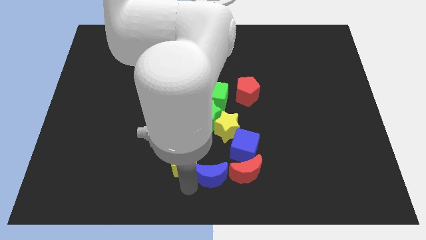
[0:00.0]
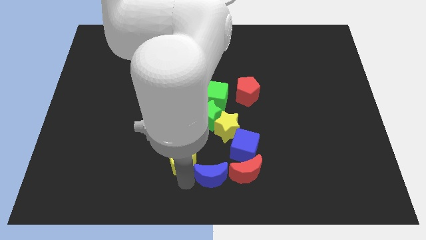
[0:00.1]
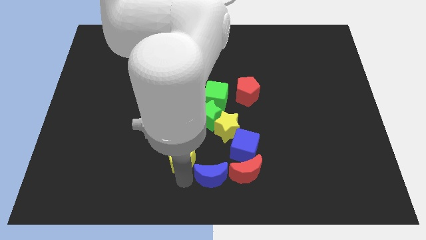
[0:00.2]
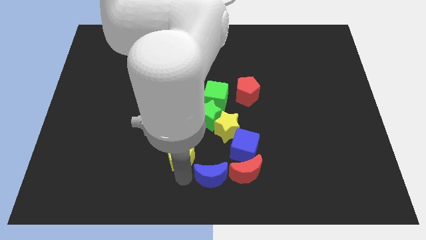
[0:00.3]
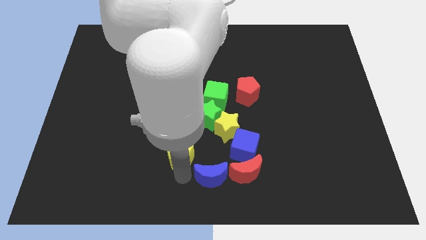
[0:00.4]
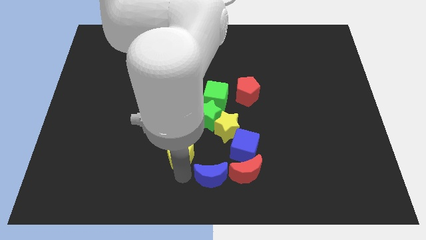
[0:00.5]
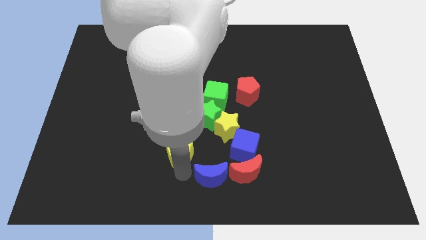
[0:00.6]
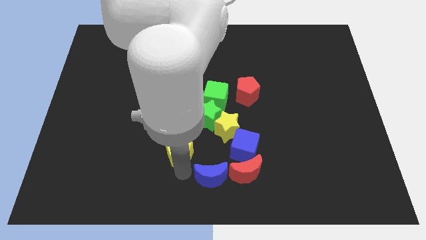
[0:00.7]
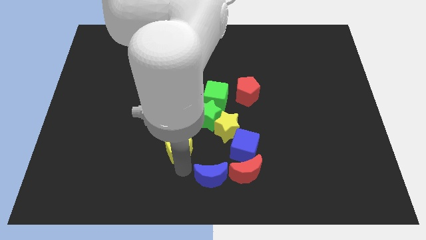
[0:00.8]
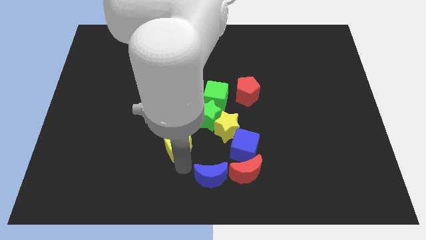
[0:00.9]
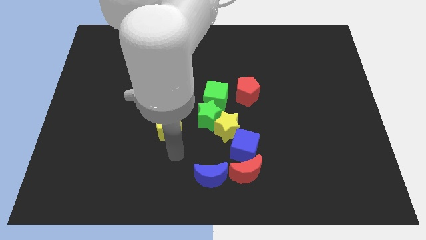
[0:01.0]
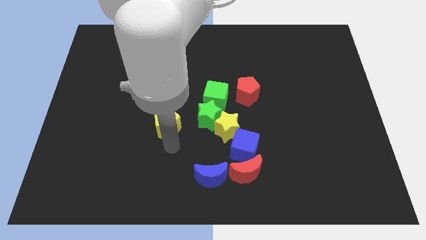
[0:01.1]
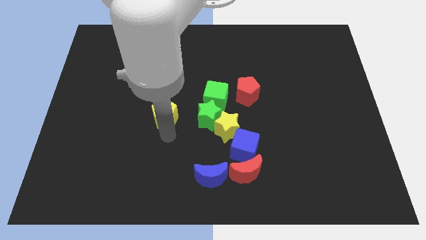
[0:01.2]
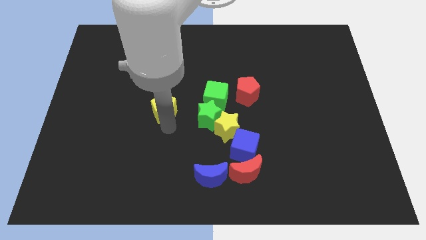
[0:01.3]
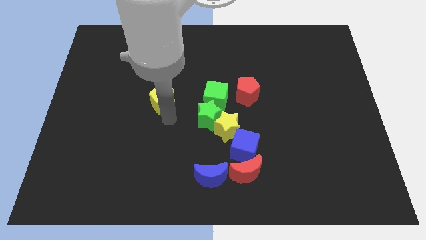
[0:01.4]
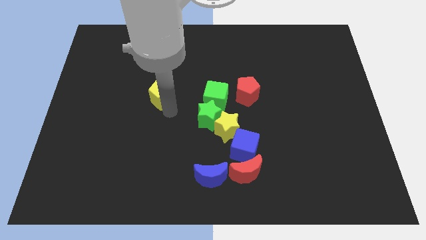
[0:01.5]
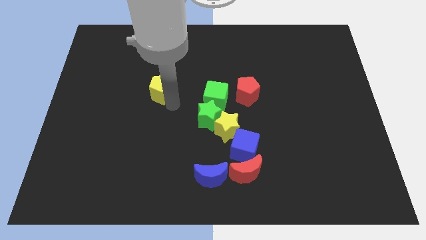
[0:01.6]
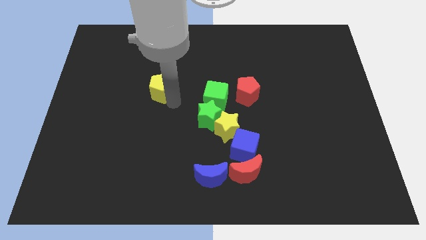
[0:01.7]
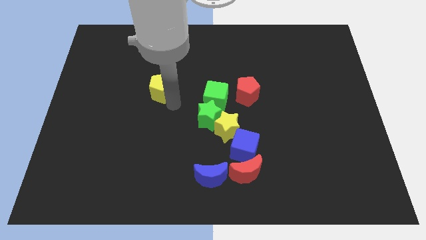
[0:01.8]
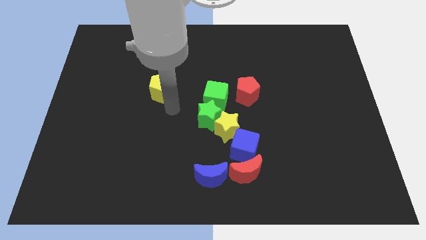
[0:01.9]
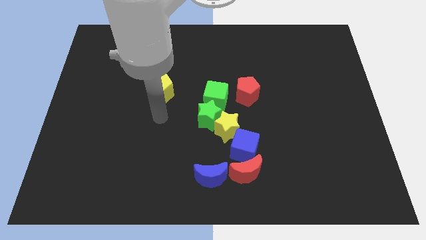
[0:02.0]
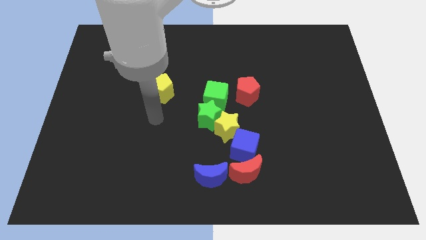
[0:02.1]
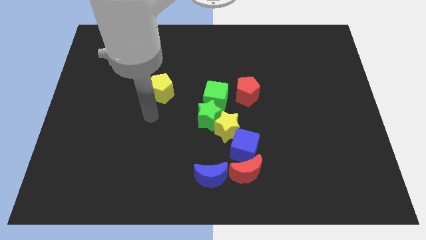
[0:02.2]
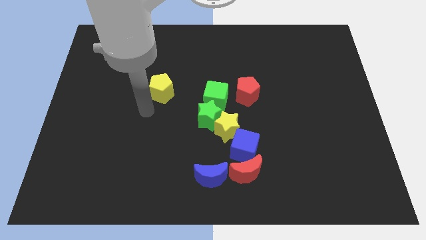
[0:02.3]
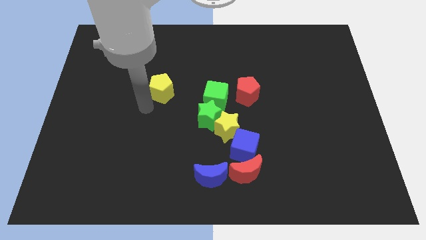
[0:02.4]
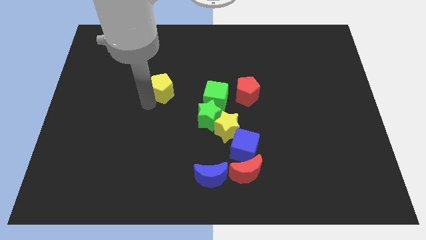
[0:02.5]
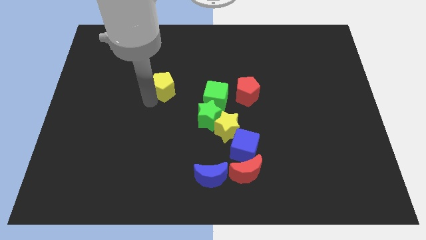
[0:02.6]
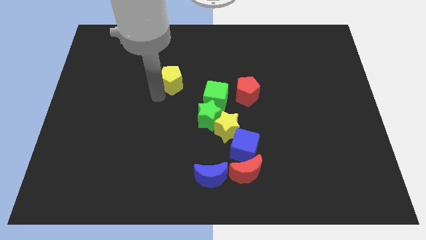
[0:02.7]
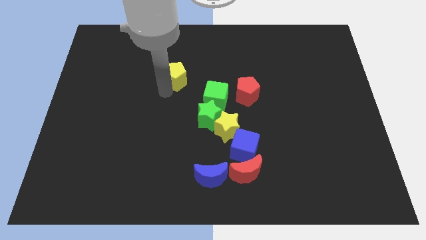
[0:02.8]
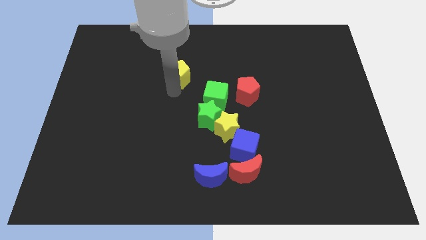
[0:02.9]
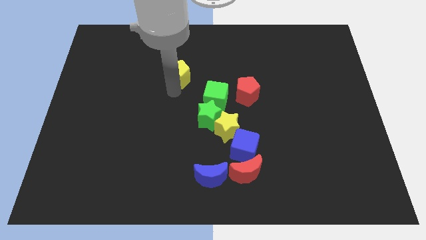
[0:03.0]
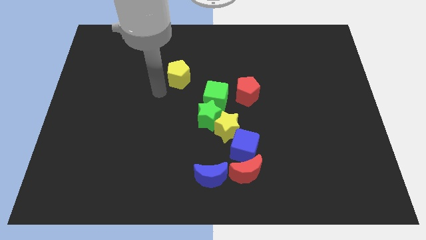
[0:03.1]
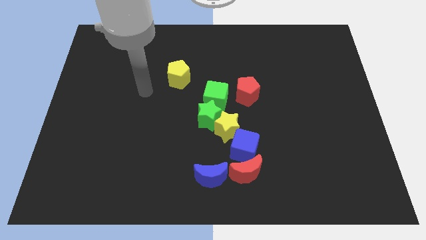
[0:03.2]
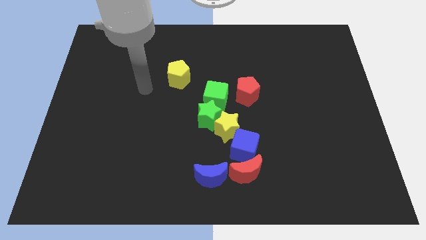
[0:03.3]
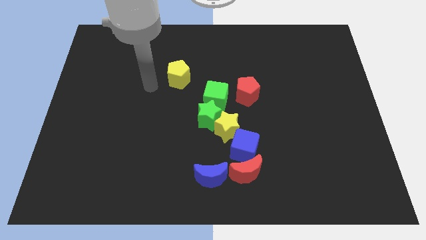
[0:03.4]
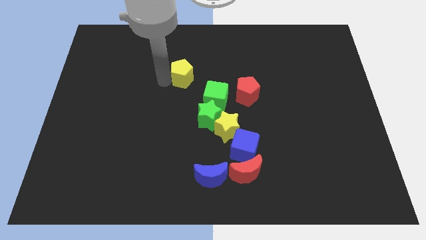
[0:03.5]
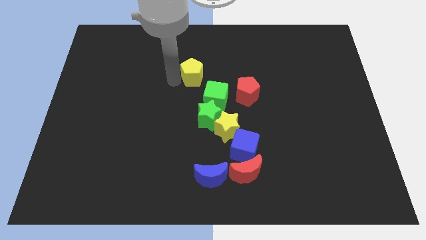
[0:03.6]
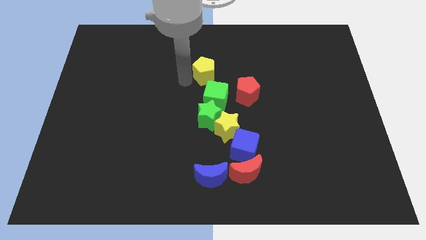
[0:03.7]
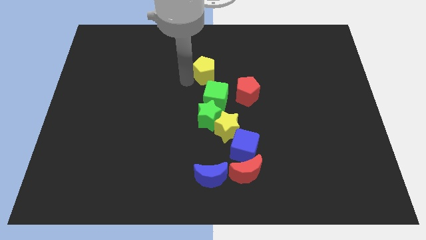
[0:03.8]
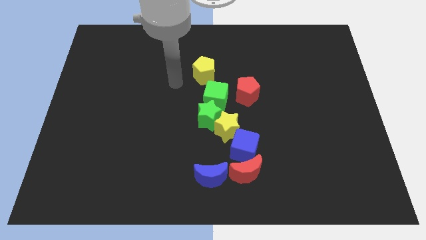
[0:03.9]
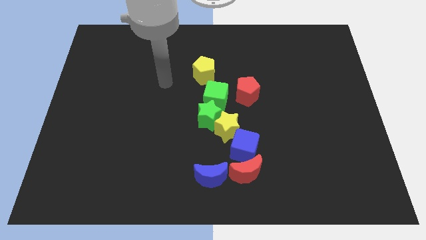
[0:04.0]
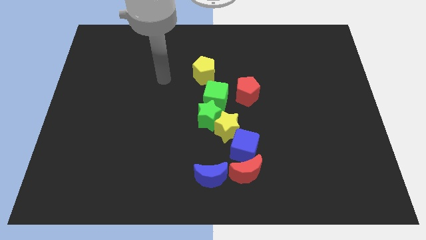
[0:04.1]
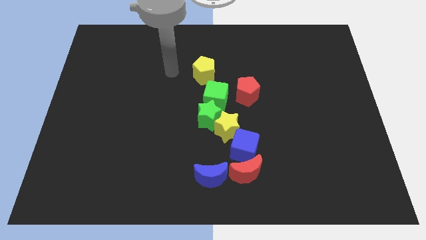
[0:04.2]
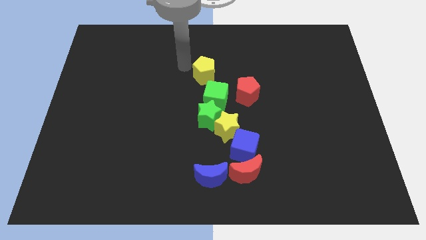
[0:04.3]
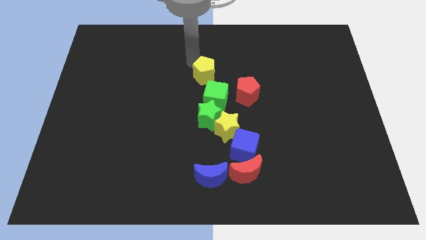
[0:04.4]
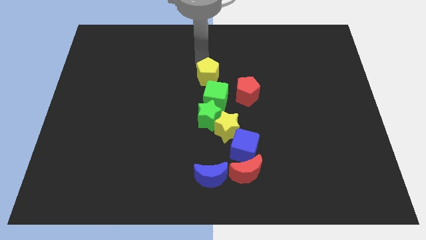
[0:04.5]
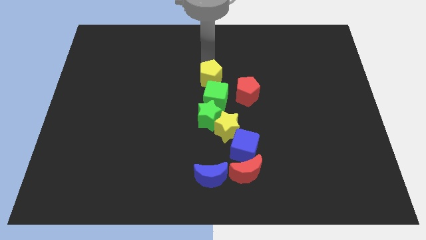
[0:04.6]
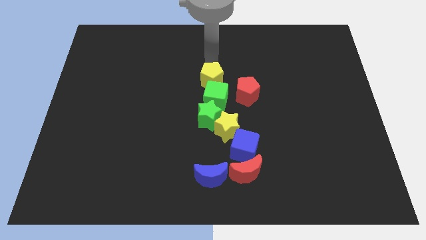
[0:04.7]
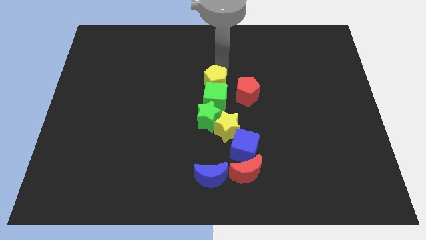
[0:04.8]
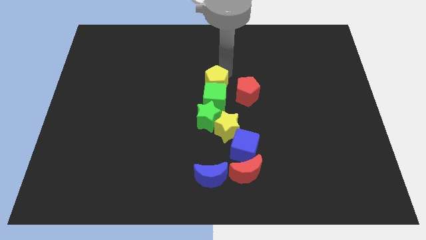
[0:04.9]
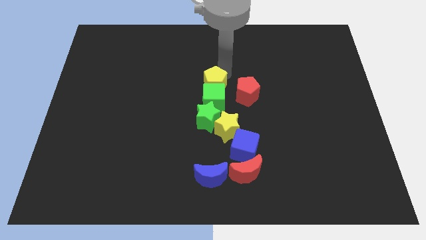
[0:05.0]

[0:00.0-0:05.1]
push yellow pentagon above green cube

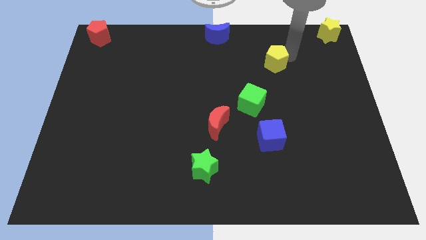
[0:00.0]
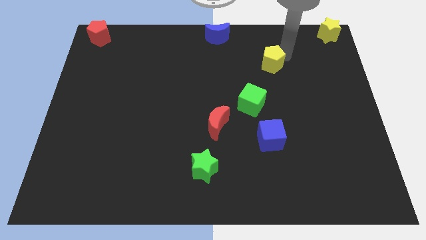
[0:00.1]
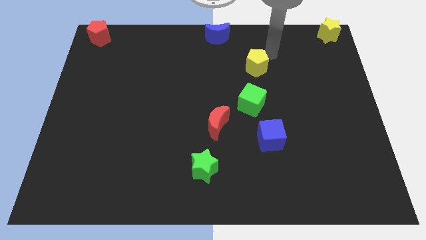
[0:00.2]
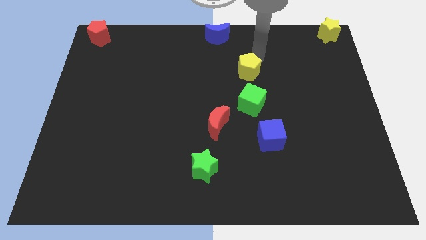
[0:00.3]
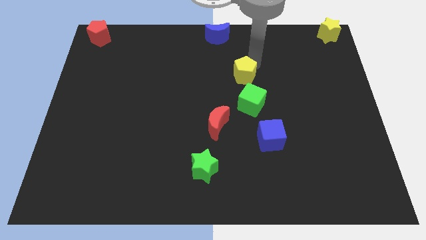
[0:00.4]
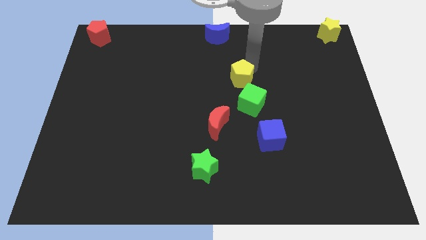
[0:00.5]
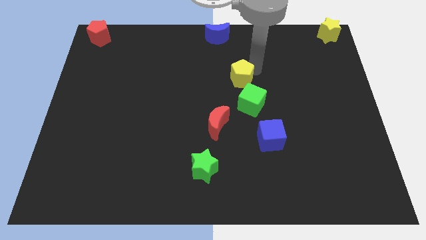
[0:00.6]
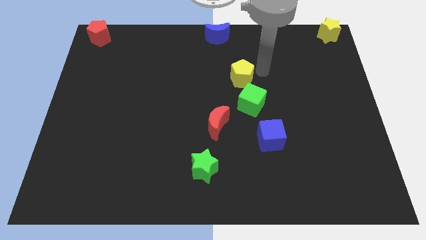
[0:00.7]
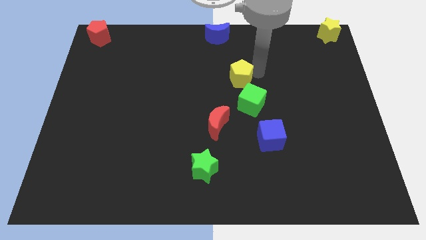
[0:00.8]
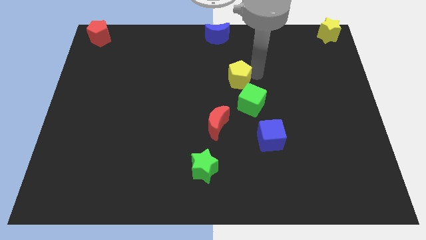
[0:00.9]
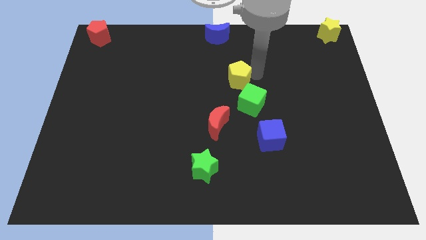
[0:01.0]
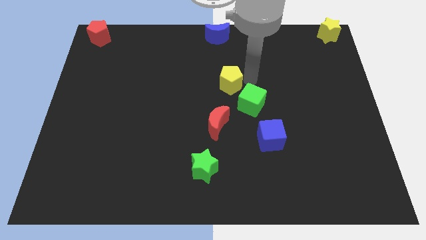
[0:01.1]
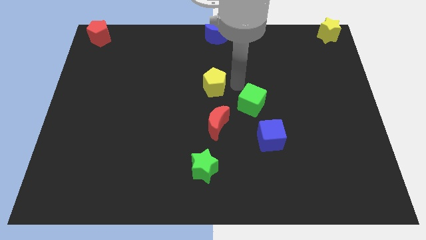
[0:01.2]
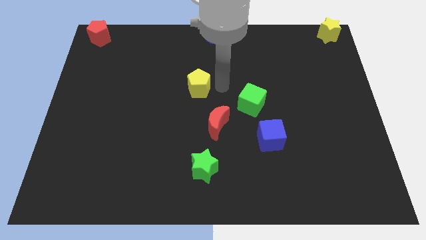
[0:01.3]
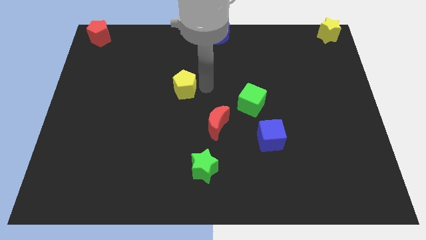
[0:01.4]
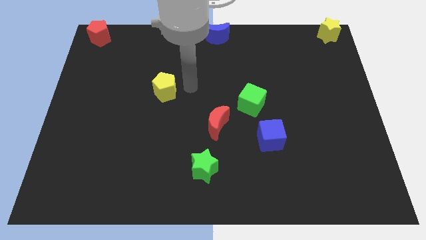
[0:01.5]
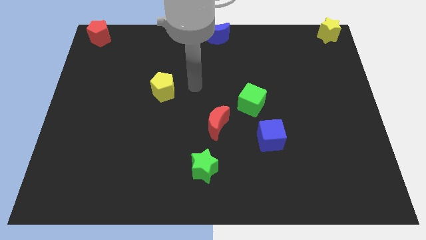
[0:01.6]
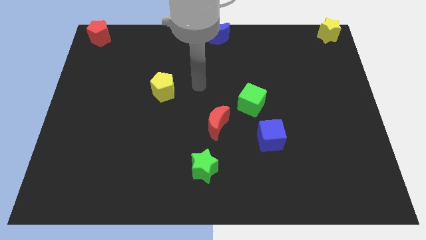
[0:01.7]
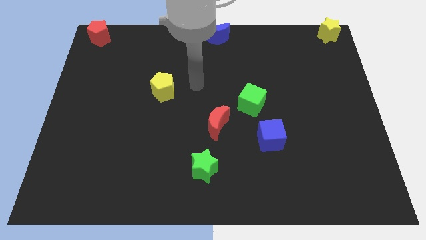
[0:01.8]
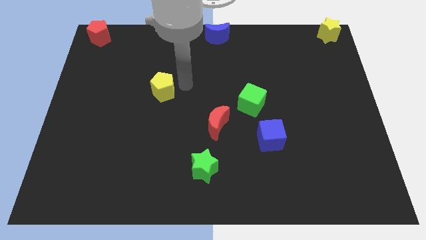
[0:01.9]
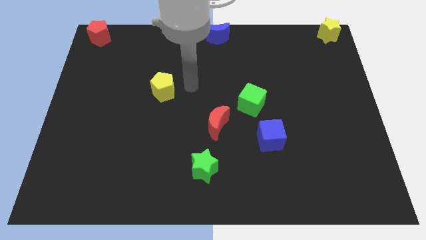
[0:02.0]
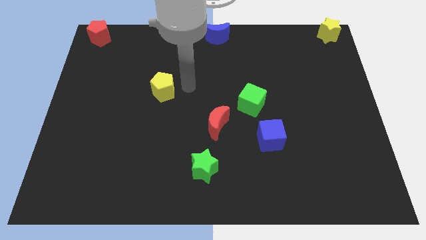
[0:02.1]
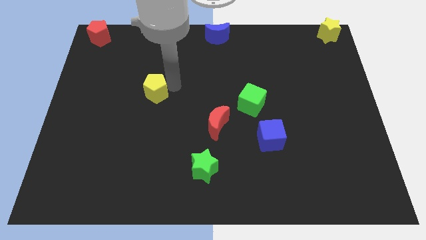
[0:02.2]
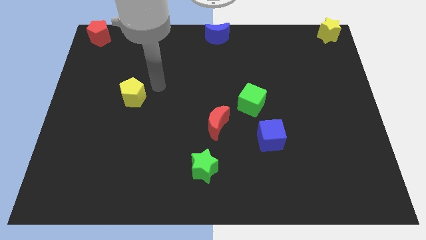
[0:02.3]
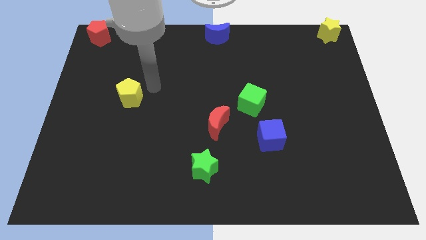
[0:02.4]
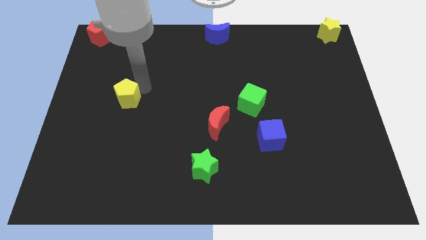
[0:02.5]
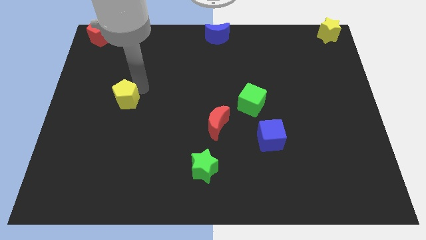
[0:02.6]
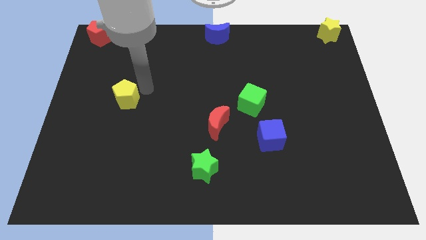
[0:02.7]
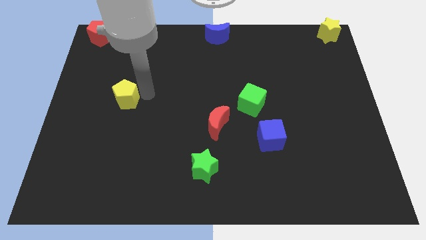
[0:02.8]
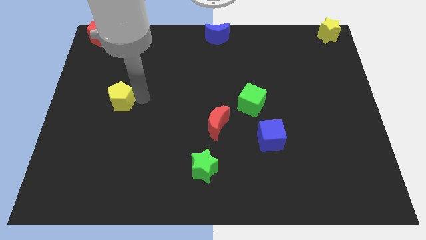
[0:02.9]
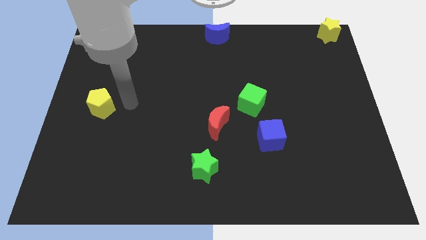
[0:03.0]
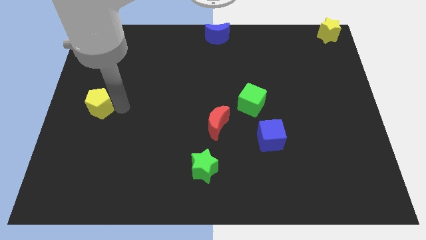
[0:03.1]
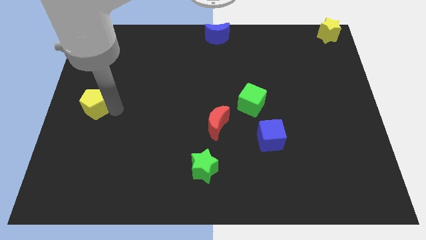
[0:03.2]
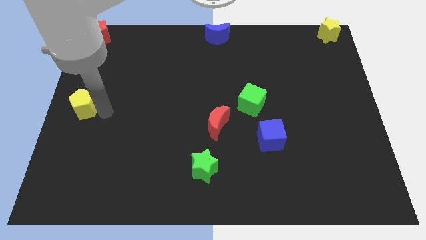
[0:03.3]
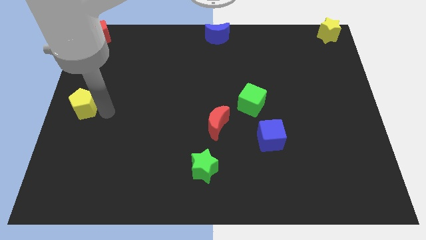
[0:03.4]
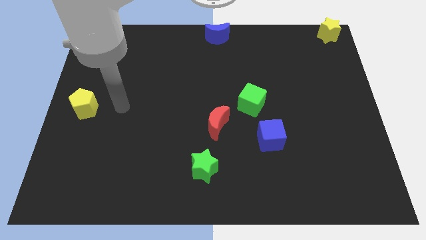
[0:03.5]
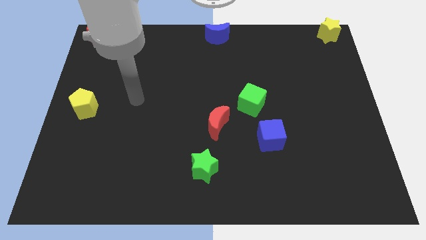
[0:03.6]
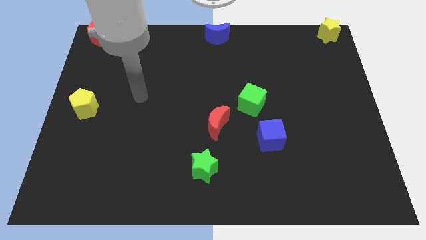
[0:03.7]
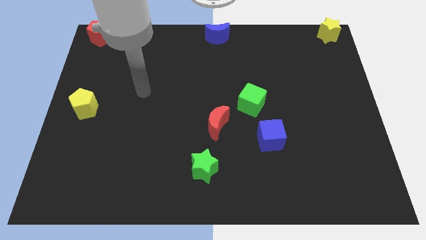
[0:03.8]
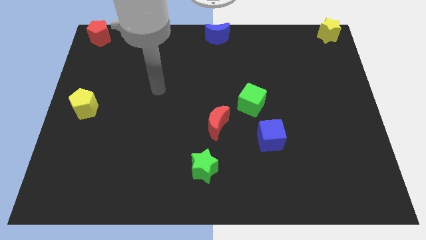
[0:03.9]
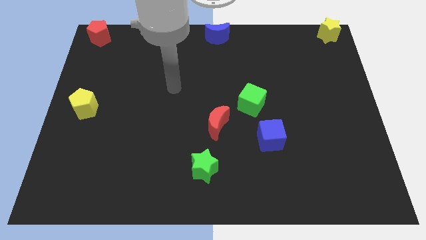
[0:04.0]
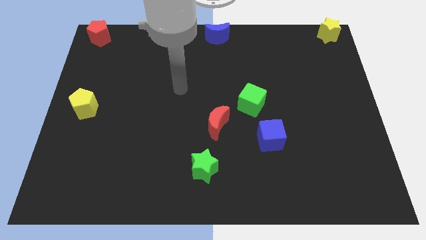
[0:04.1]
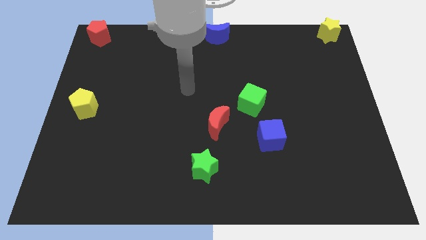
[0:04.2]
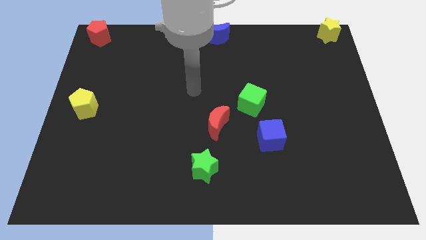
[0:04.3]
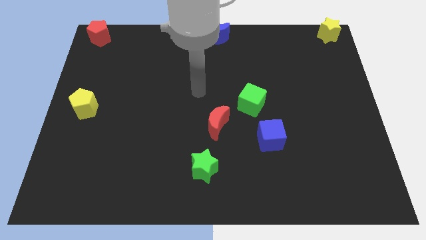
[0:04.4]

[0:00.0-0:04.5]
push the yellow pentagon towards the left center of the board
